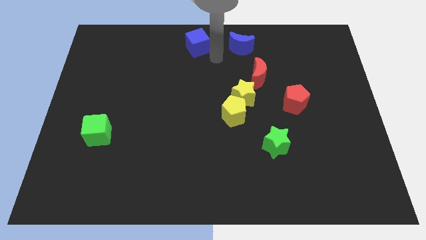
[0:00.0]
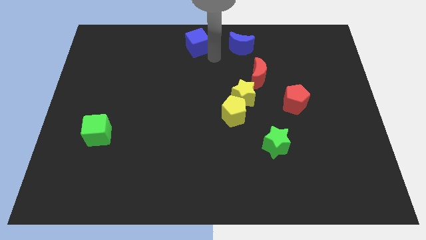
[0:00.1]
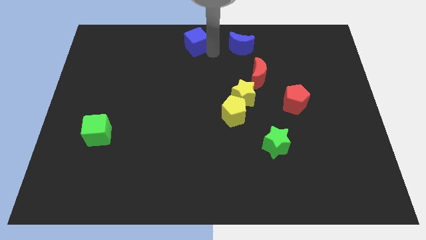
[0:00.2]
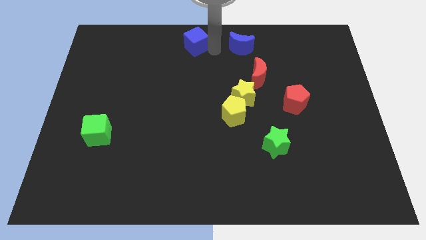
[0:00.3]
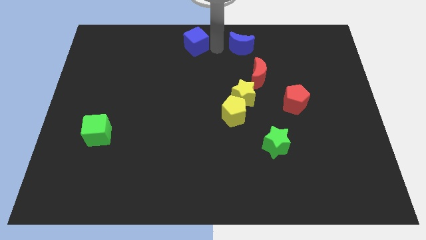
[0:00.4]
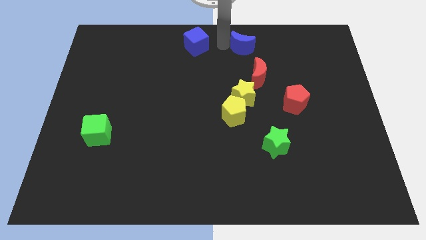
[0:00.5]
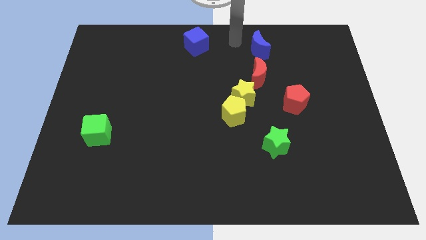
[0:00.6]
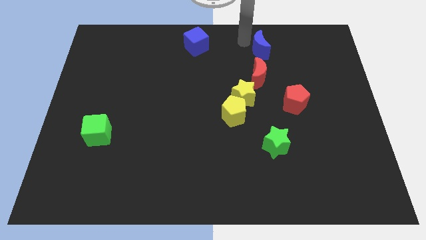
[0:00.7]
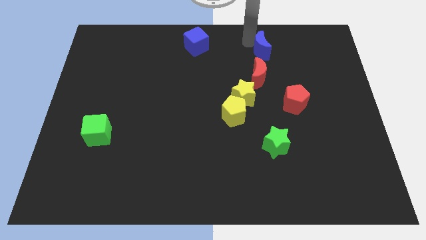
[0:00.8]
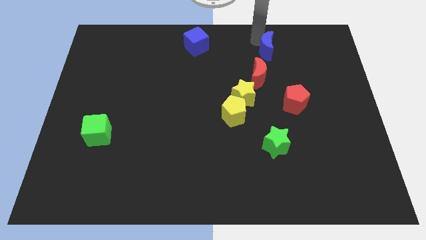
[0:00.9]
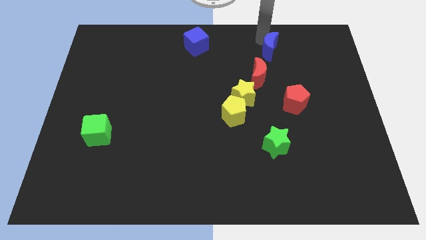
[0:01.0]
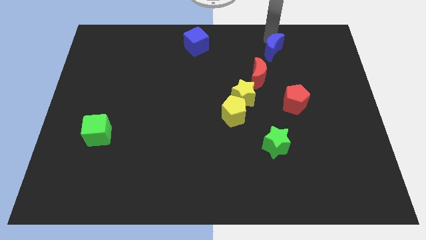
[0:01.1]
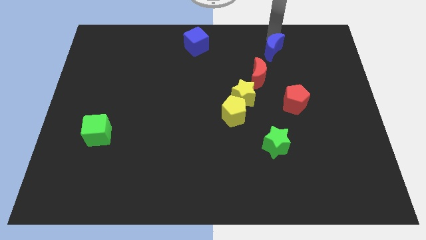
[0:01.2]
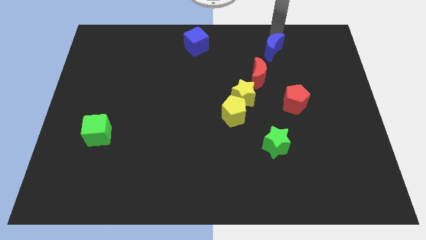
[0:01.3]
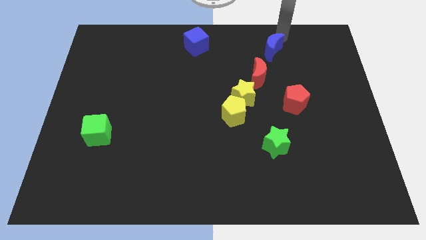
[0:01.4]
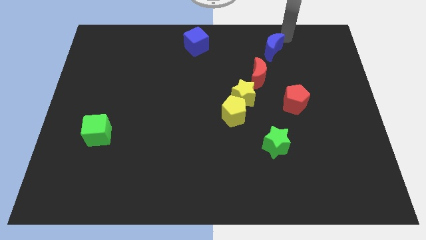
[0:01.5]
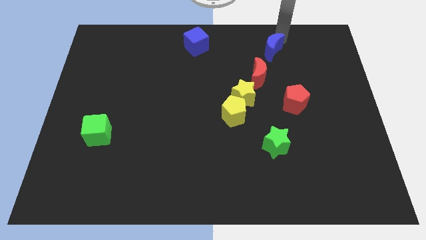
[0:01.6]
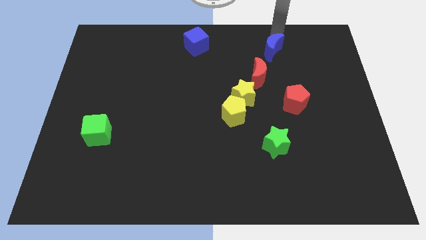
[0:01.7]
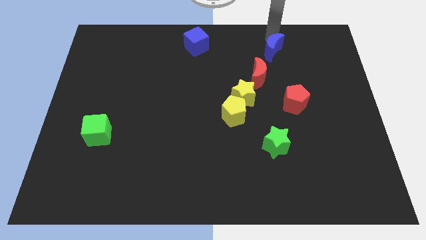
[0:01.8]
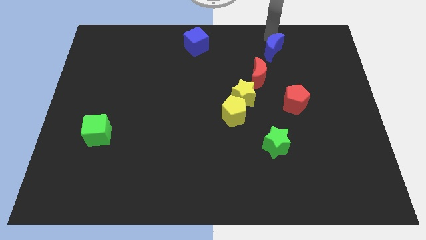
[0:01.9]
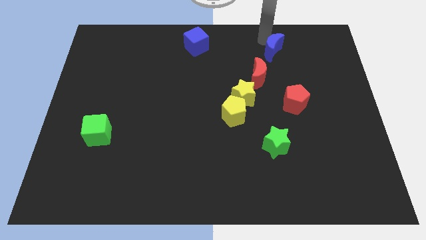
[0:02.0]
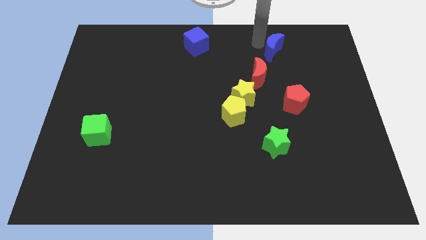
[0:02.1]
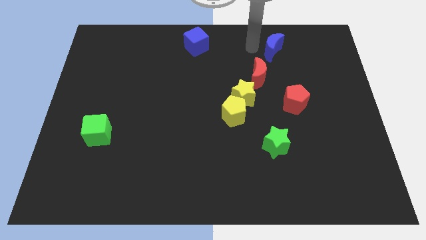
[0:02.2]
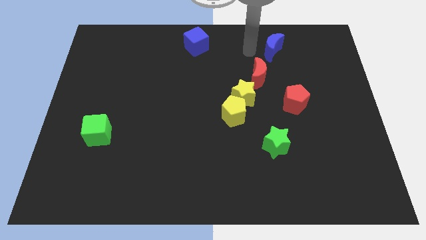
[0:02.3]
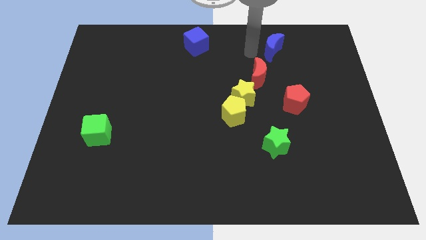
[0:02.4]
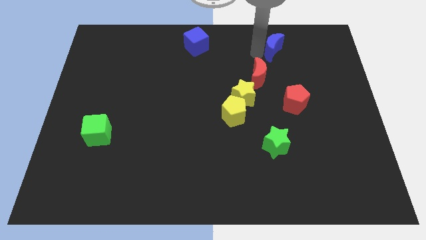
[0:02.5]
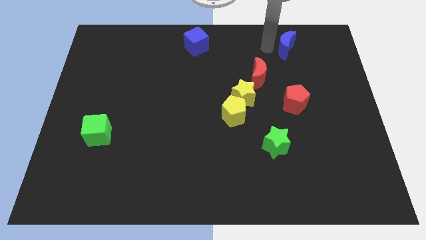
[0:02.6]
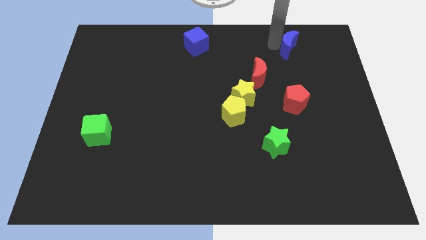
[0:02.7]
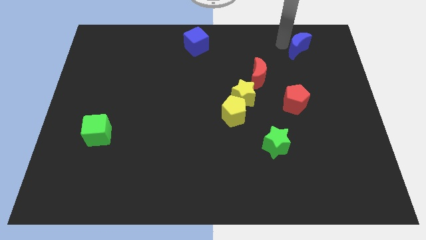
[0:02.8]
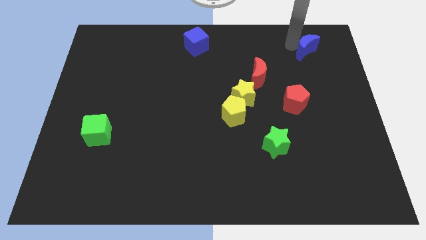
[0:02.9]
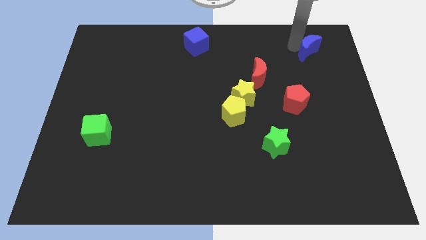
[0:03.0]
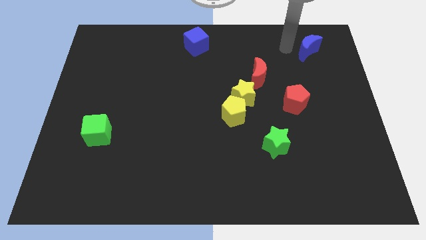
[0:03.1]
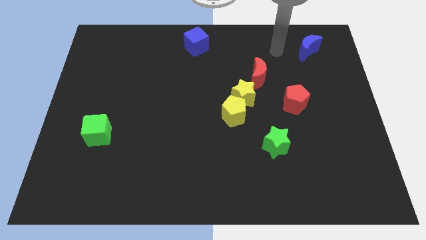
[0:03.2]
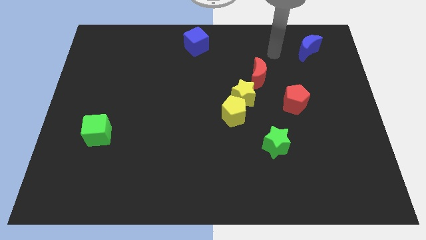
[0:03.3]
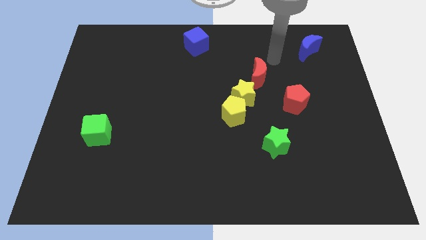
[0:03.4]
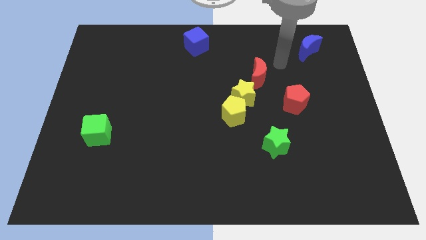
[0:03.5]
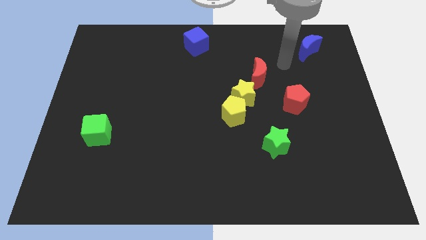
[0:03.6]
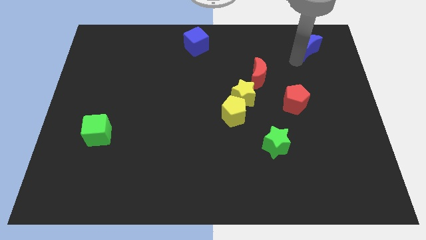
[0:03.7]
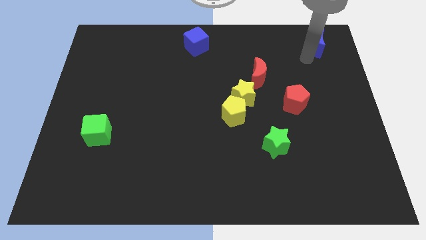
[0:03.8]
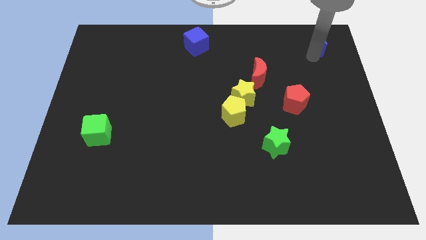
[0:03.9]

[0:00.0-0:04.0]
move the blue moon to the top right

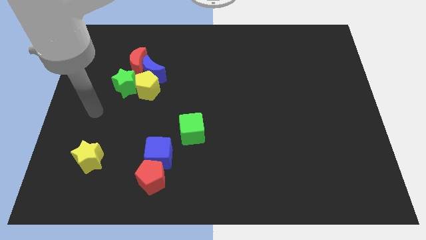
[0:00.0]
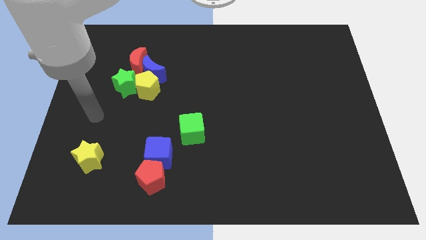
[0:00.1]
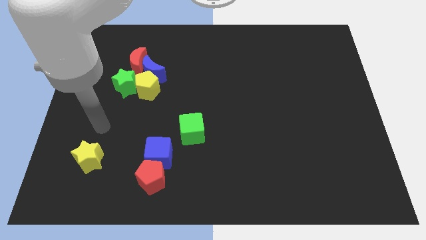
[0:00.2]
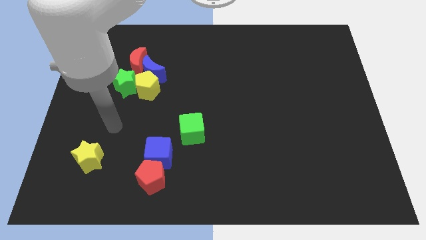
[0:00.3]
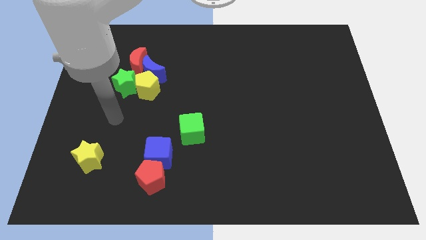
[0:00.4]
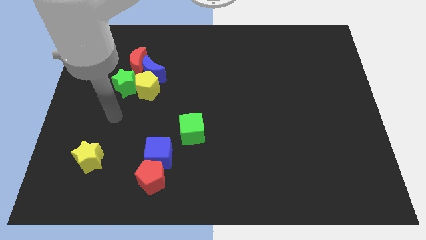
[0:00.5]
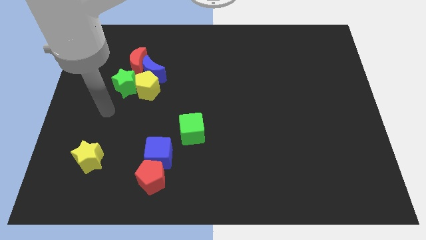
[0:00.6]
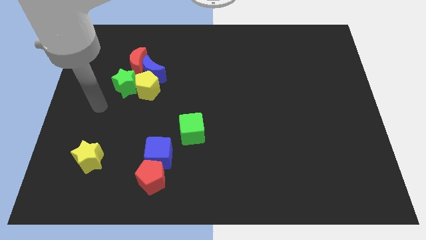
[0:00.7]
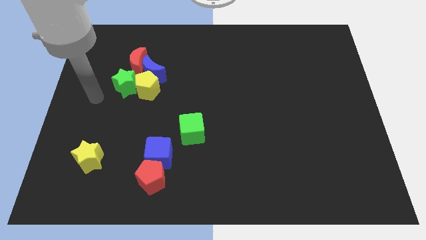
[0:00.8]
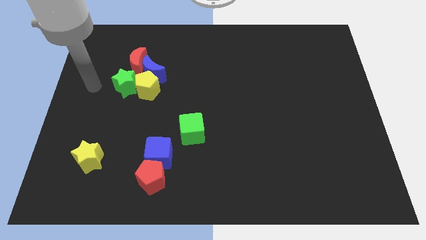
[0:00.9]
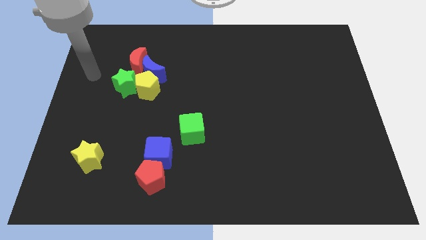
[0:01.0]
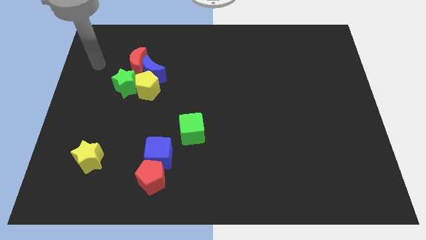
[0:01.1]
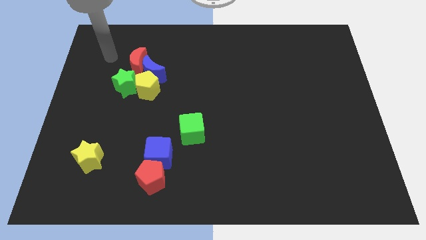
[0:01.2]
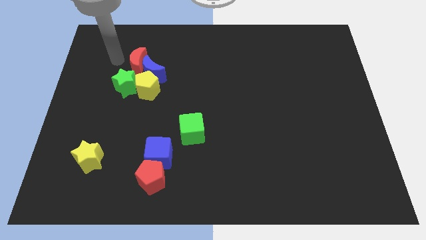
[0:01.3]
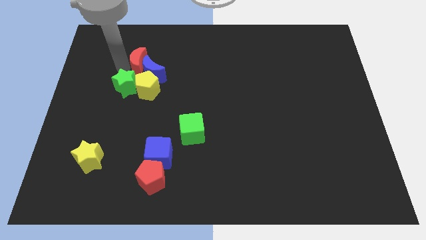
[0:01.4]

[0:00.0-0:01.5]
place your hand above the green star

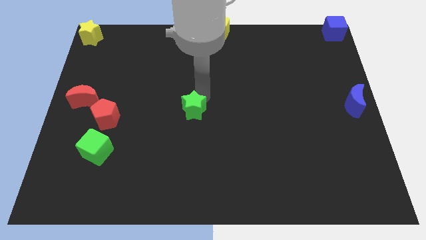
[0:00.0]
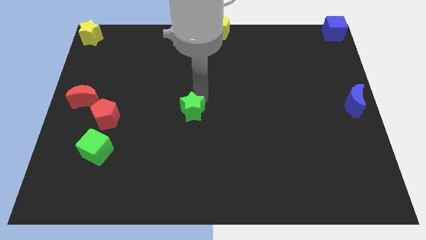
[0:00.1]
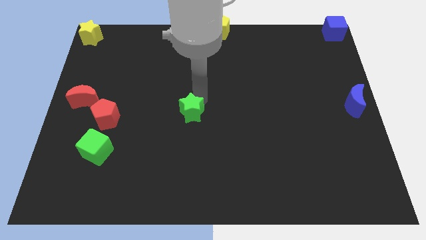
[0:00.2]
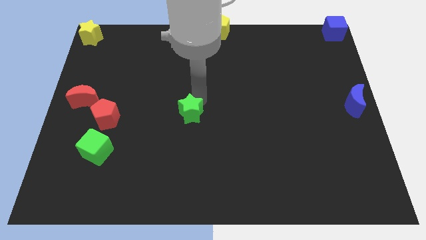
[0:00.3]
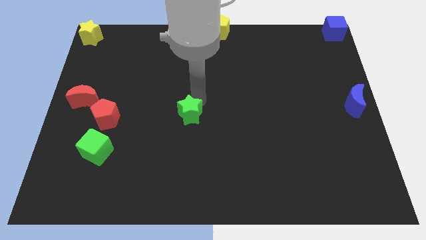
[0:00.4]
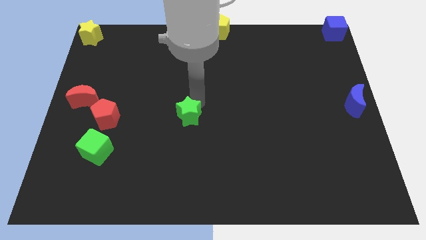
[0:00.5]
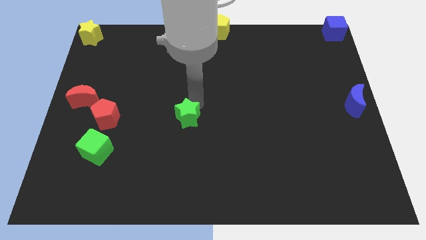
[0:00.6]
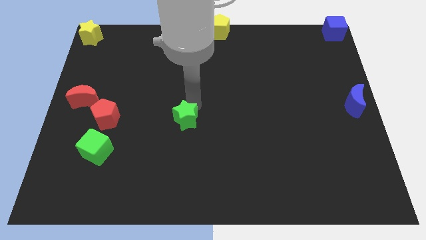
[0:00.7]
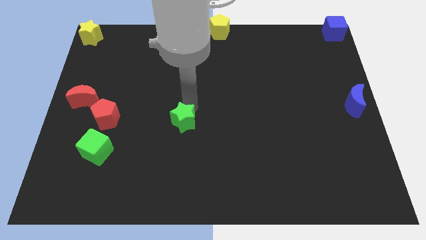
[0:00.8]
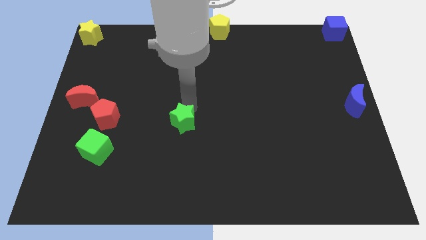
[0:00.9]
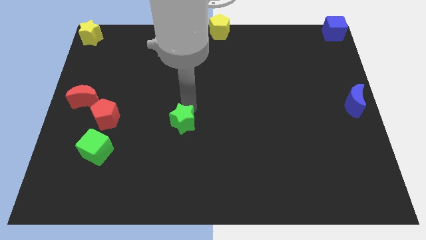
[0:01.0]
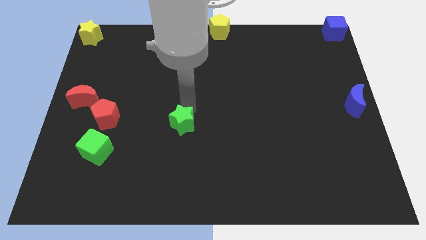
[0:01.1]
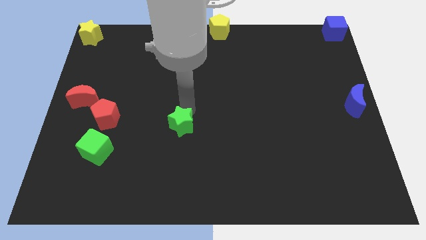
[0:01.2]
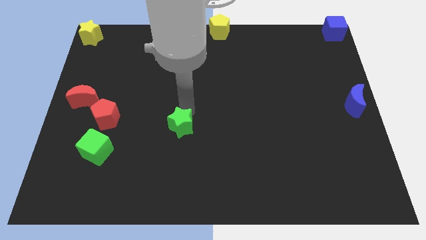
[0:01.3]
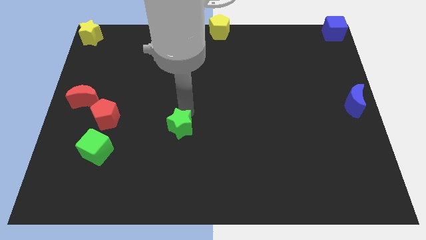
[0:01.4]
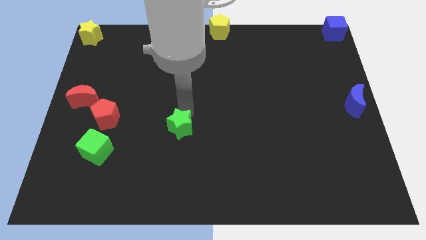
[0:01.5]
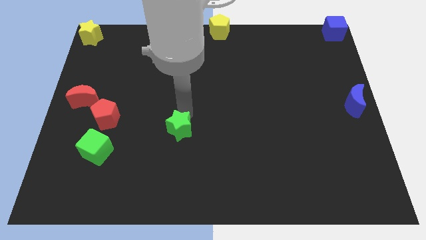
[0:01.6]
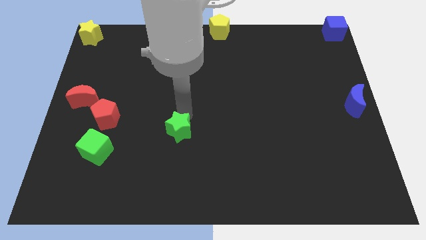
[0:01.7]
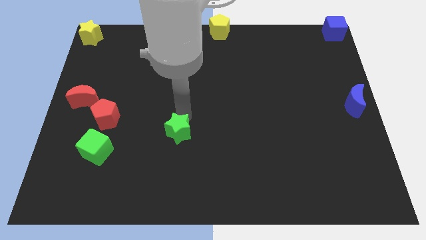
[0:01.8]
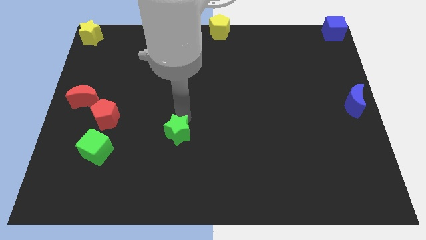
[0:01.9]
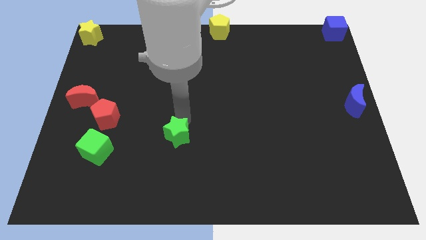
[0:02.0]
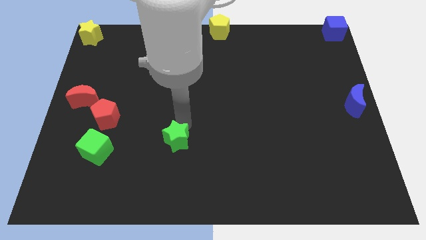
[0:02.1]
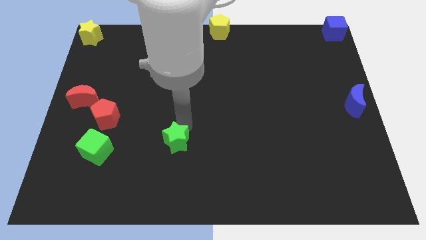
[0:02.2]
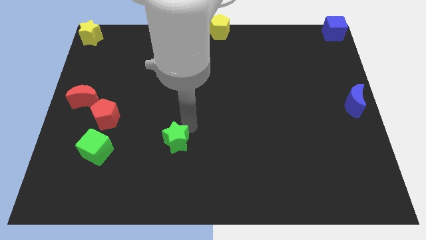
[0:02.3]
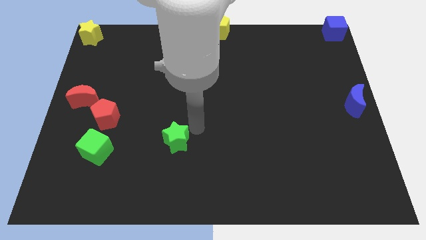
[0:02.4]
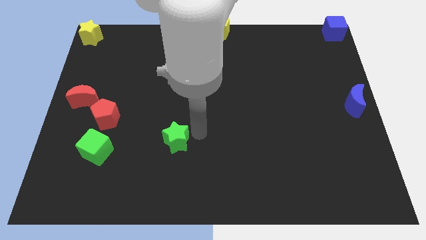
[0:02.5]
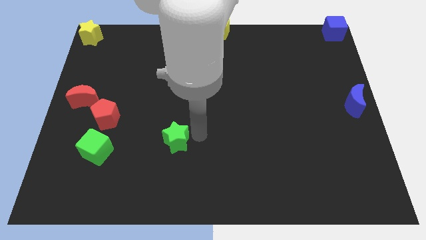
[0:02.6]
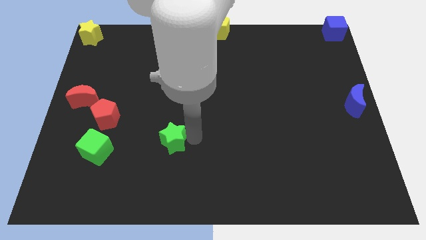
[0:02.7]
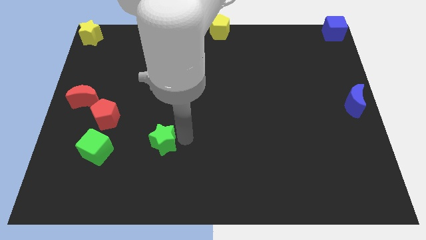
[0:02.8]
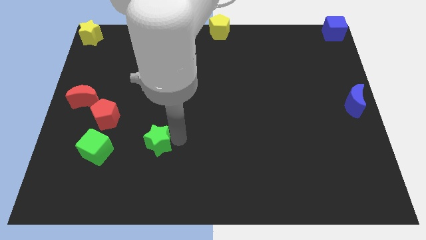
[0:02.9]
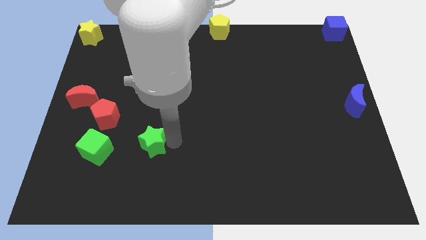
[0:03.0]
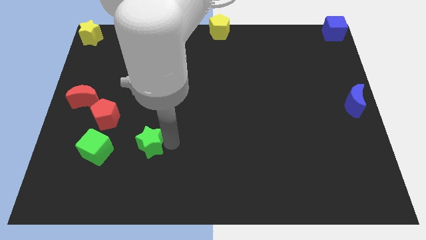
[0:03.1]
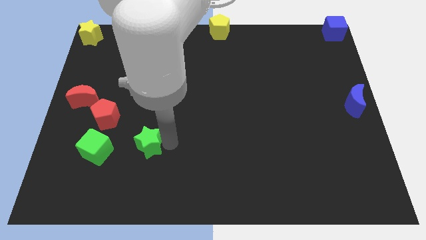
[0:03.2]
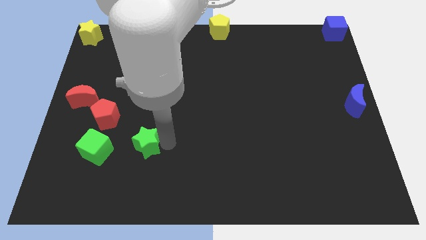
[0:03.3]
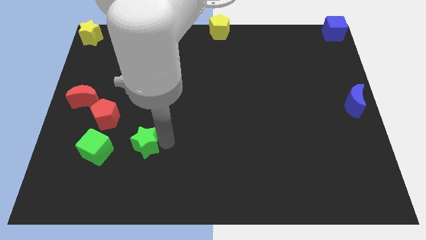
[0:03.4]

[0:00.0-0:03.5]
drag the green star diagonally bottom right to the red pentagon
